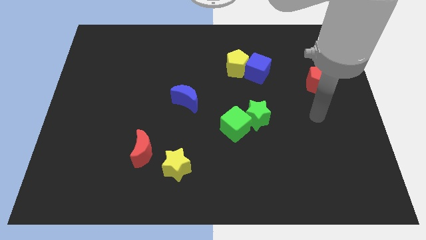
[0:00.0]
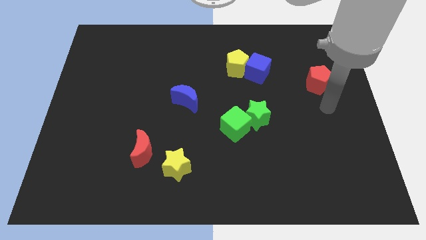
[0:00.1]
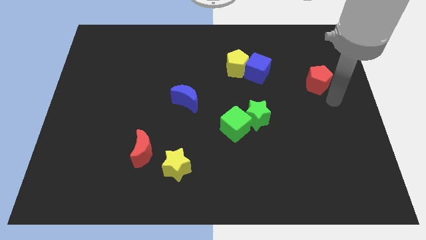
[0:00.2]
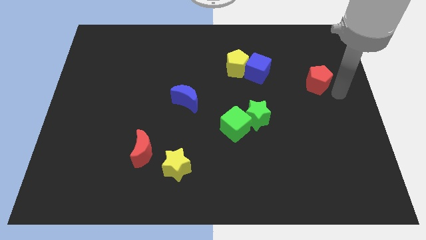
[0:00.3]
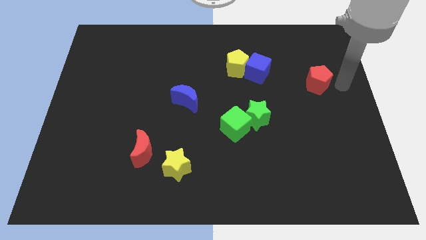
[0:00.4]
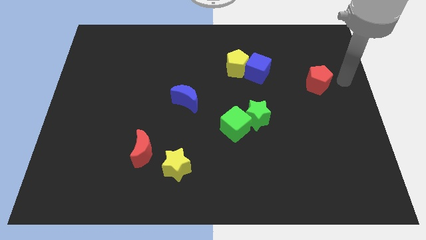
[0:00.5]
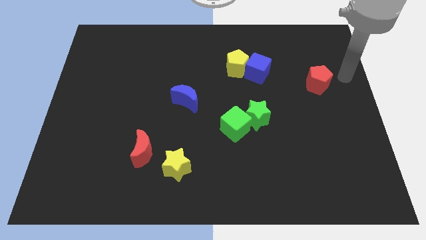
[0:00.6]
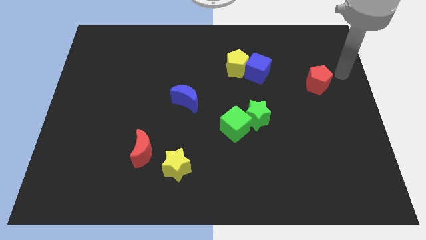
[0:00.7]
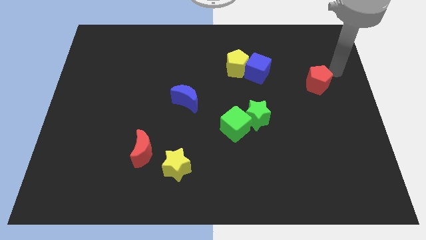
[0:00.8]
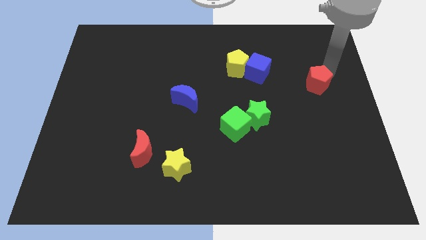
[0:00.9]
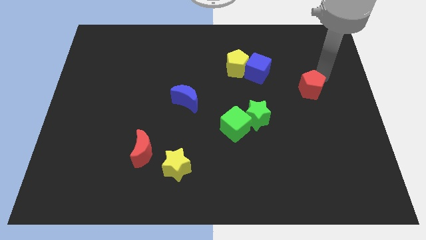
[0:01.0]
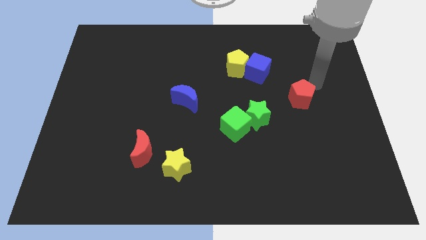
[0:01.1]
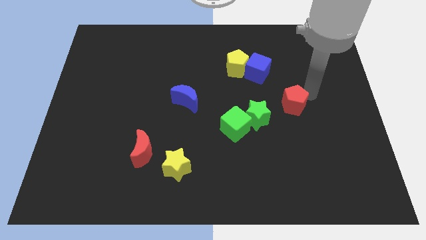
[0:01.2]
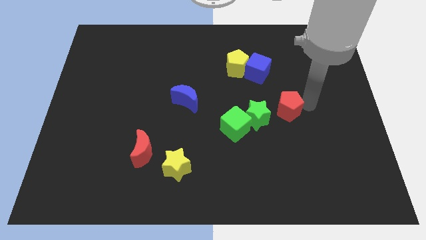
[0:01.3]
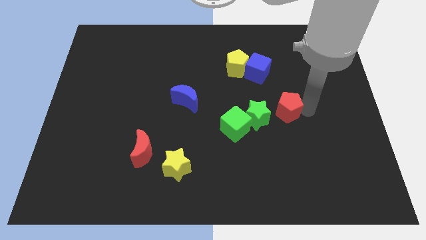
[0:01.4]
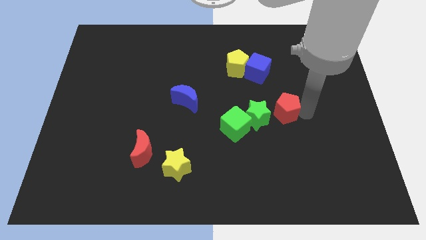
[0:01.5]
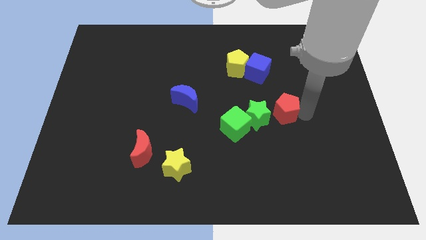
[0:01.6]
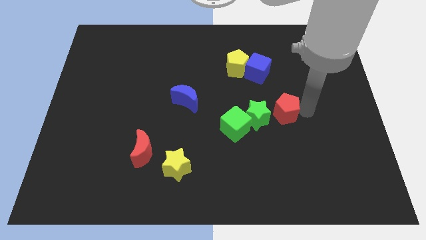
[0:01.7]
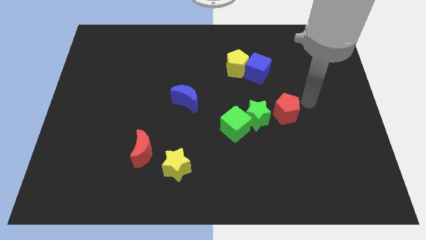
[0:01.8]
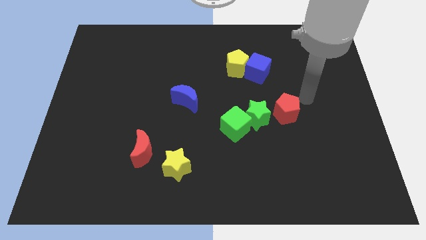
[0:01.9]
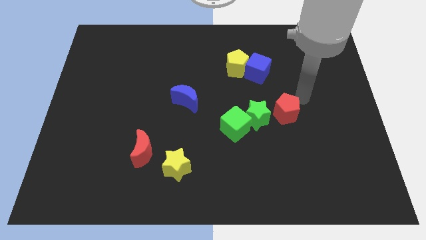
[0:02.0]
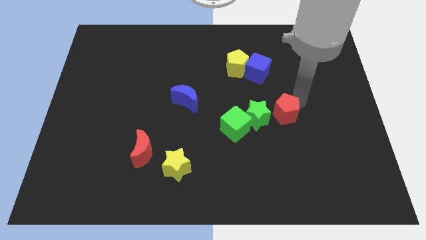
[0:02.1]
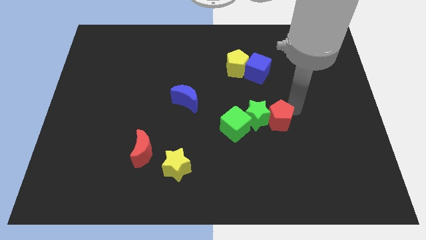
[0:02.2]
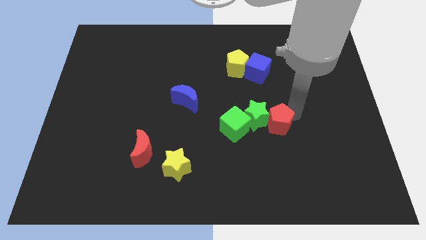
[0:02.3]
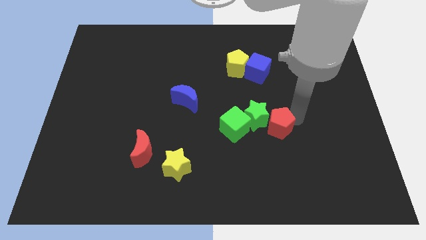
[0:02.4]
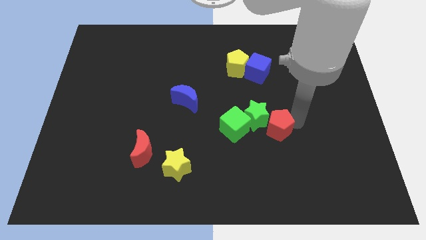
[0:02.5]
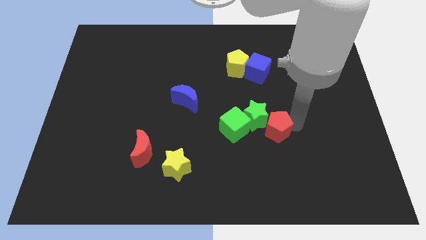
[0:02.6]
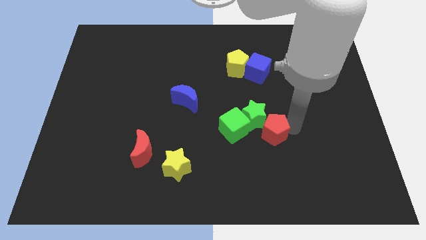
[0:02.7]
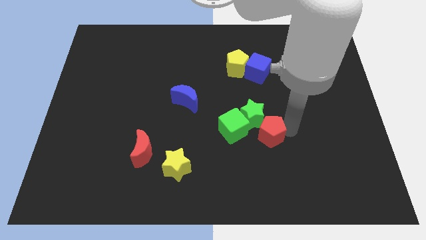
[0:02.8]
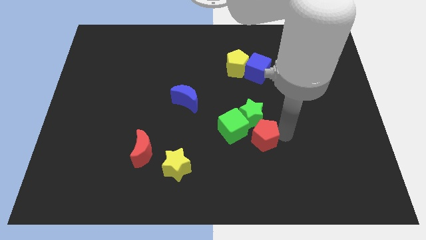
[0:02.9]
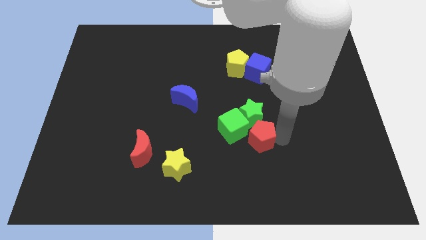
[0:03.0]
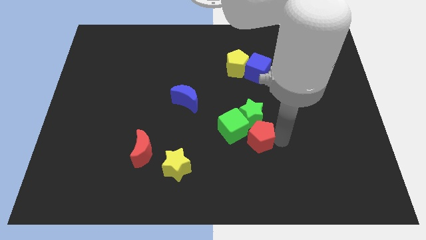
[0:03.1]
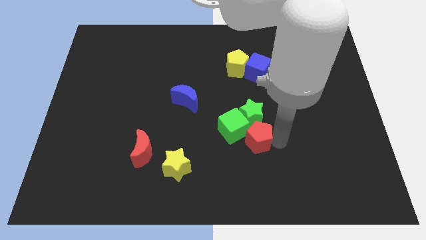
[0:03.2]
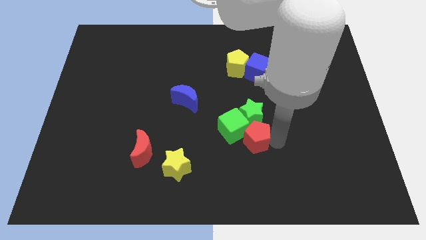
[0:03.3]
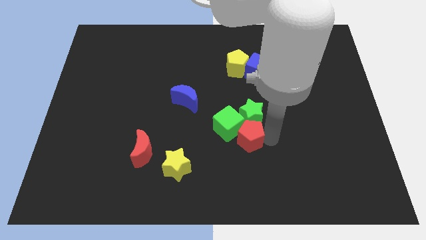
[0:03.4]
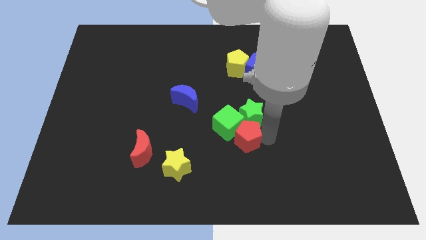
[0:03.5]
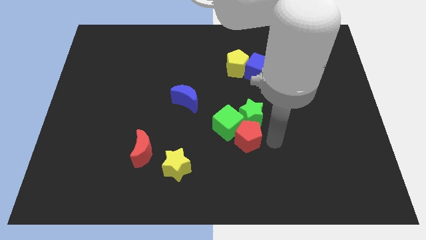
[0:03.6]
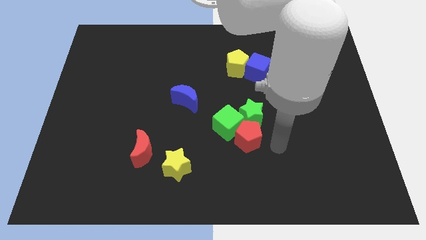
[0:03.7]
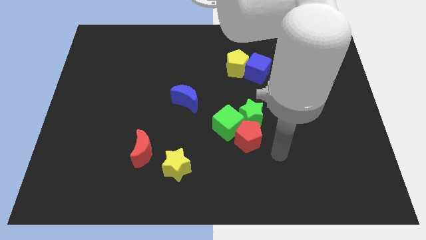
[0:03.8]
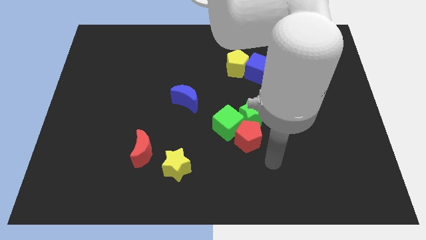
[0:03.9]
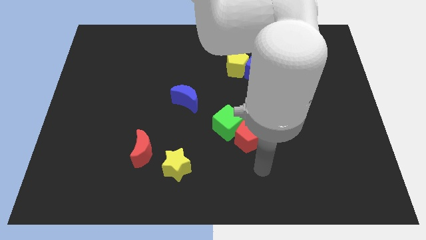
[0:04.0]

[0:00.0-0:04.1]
place the red pentagon on at the bottom of the right of the green cube

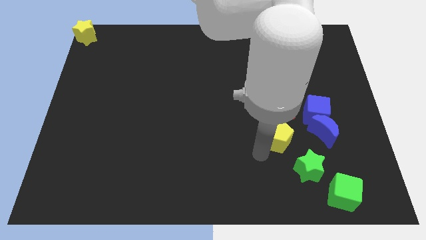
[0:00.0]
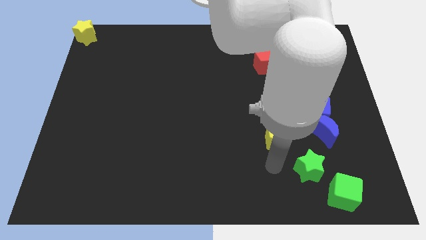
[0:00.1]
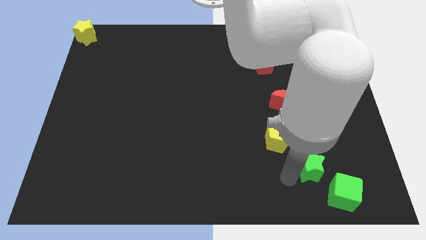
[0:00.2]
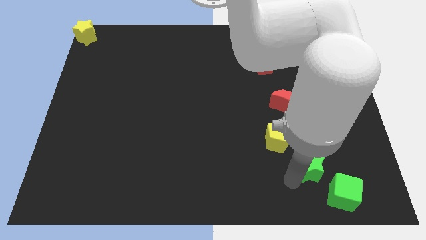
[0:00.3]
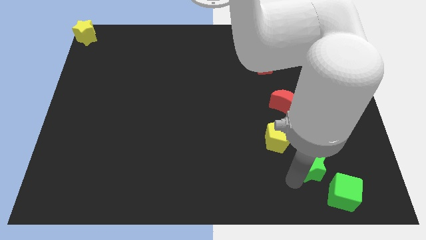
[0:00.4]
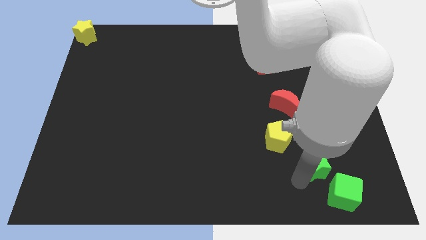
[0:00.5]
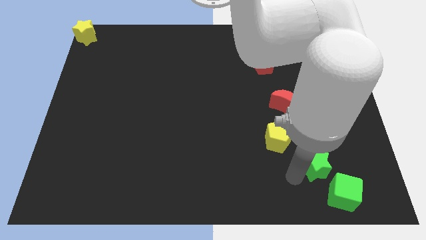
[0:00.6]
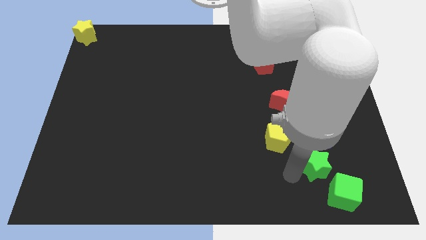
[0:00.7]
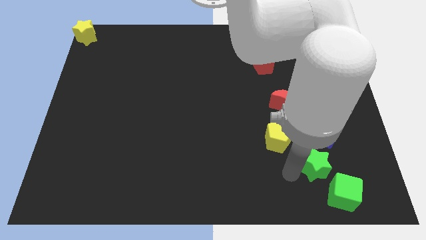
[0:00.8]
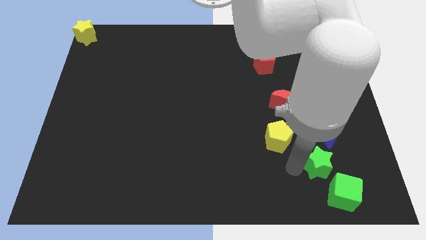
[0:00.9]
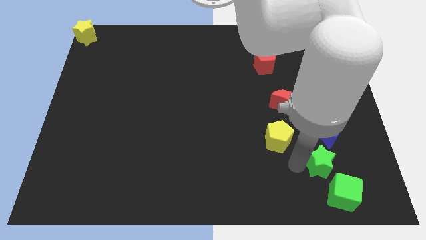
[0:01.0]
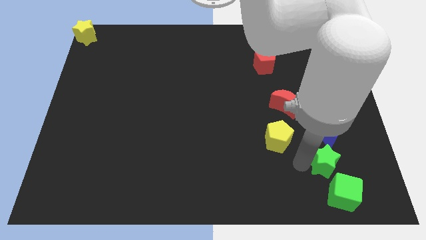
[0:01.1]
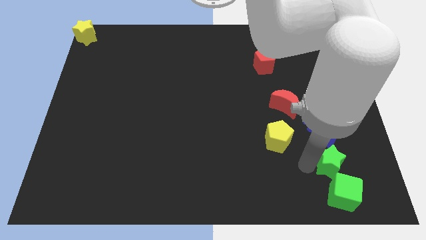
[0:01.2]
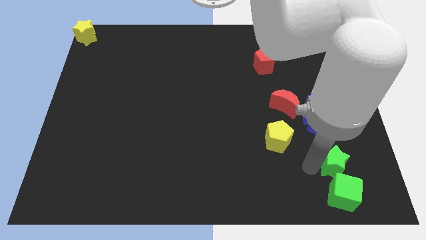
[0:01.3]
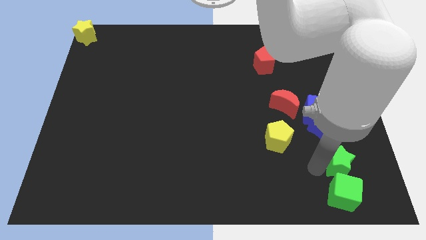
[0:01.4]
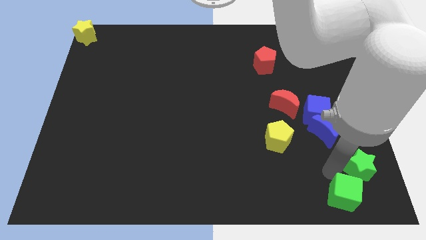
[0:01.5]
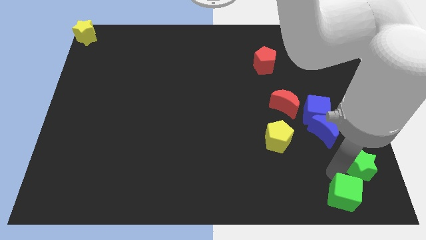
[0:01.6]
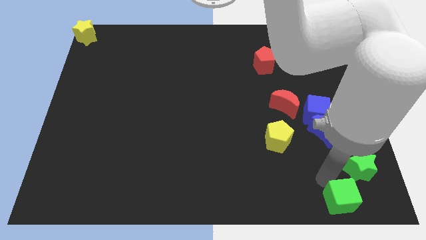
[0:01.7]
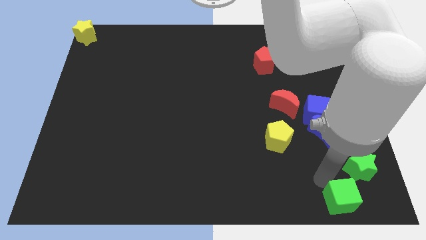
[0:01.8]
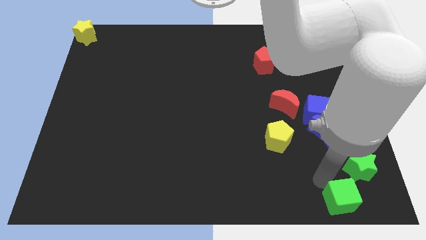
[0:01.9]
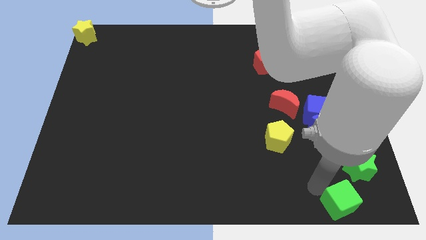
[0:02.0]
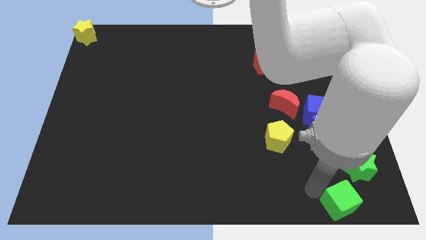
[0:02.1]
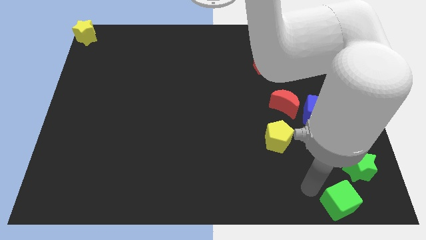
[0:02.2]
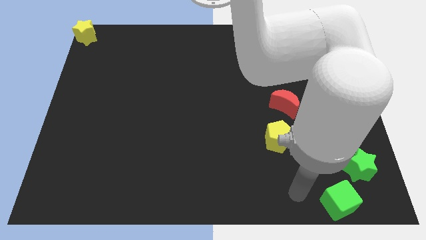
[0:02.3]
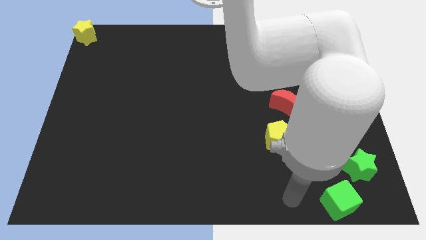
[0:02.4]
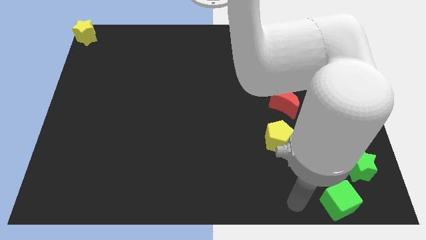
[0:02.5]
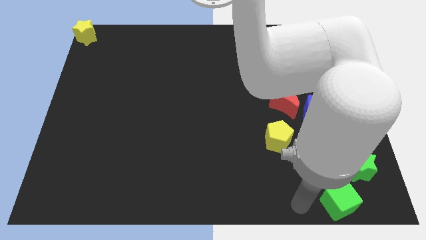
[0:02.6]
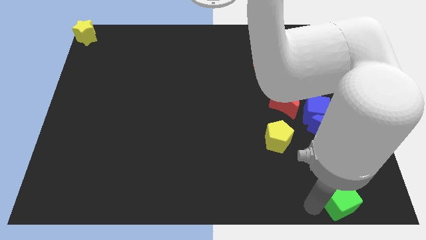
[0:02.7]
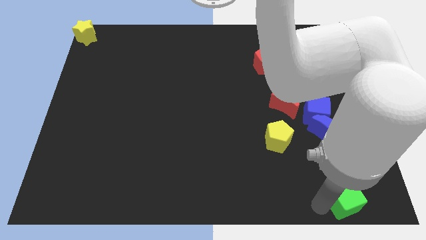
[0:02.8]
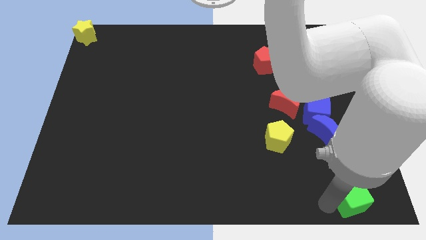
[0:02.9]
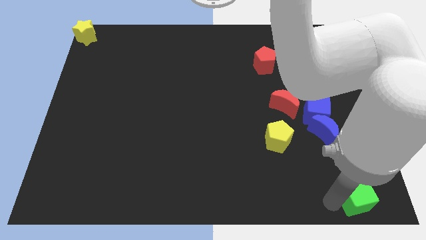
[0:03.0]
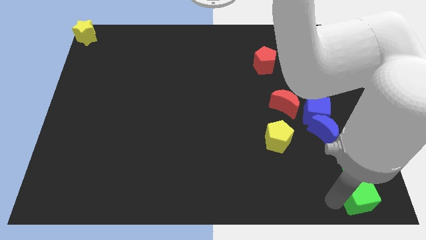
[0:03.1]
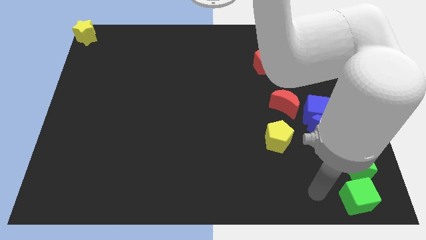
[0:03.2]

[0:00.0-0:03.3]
push the green star and green cube to the bottom right corner

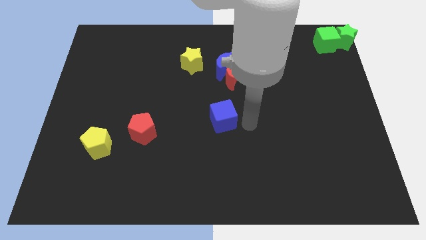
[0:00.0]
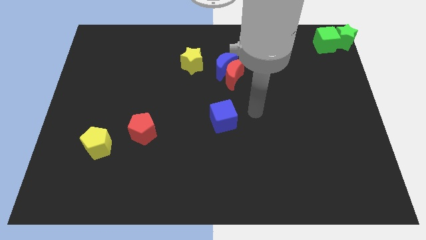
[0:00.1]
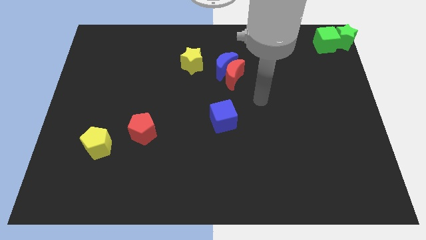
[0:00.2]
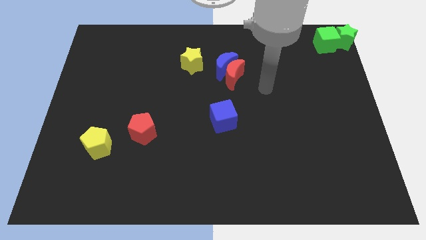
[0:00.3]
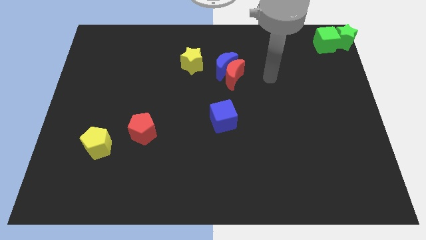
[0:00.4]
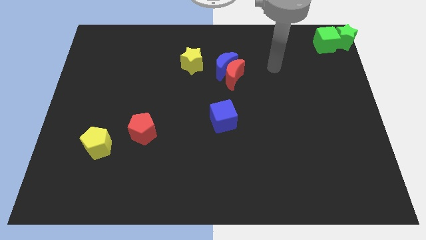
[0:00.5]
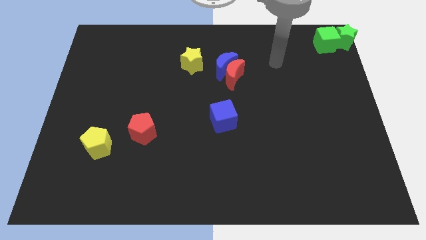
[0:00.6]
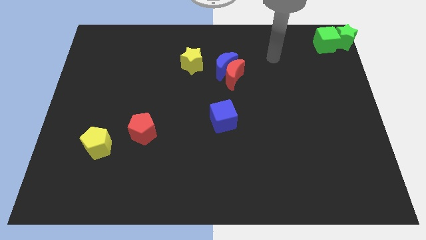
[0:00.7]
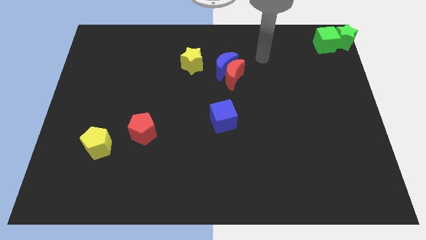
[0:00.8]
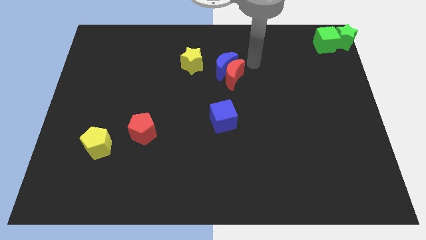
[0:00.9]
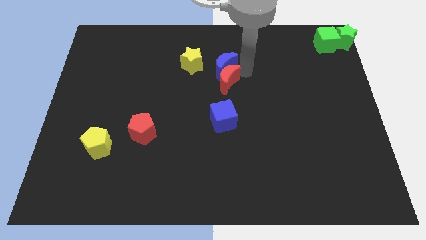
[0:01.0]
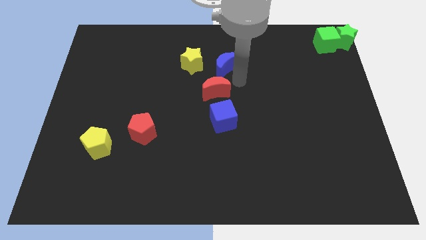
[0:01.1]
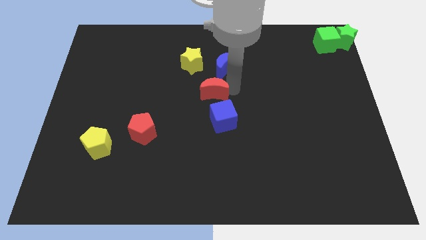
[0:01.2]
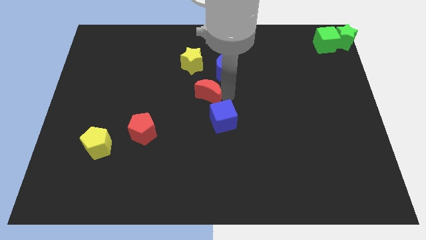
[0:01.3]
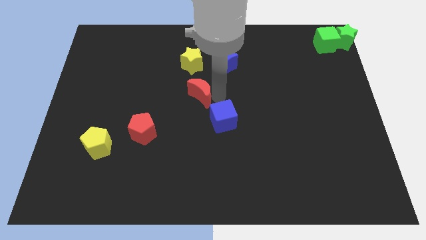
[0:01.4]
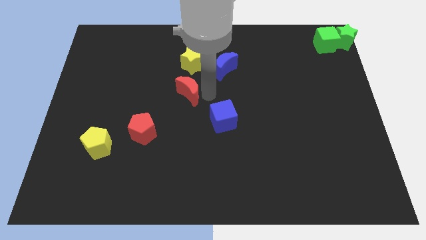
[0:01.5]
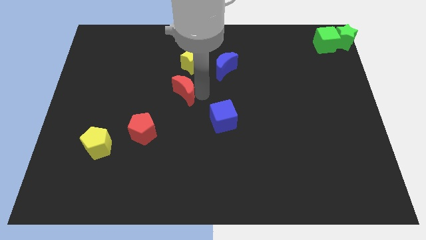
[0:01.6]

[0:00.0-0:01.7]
place the red moon below to the yellow star
